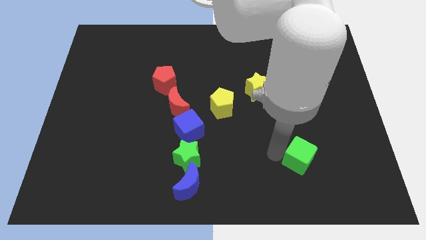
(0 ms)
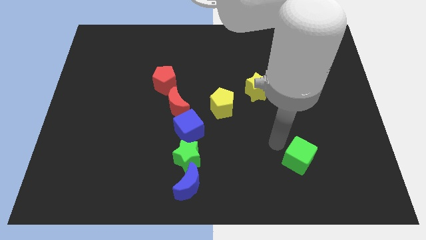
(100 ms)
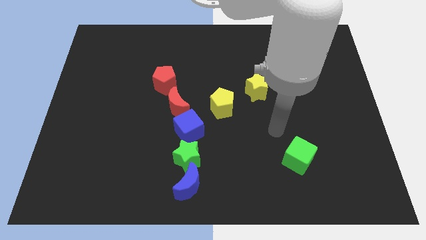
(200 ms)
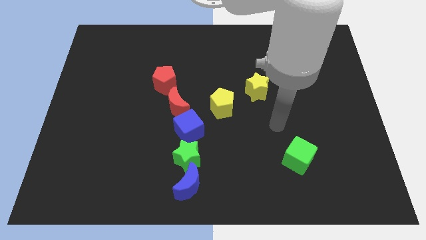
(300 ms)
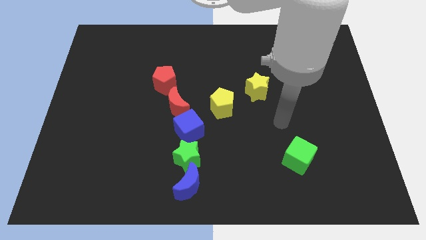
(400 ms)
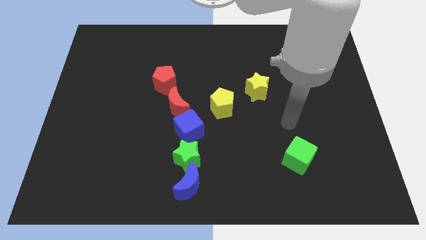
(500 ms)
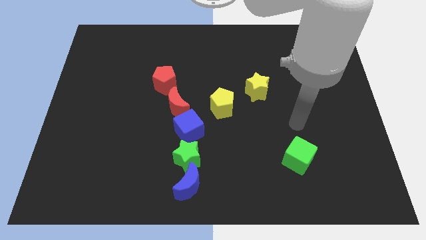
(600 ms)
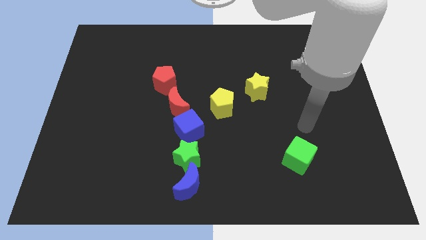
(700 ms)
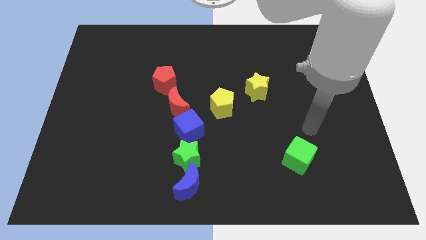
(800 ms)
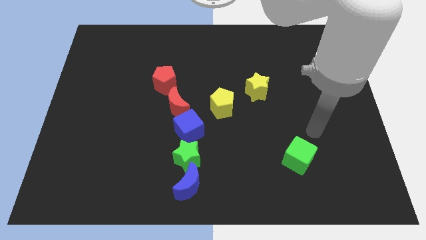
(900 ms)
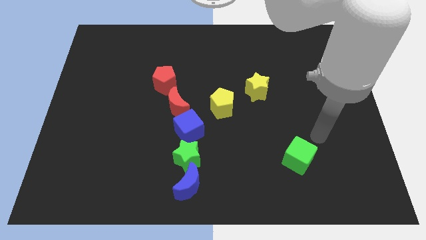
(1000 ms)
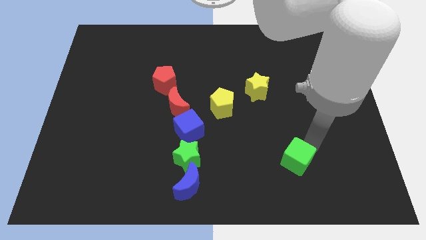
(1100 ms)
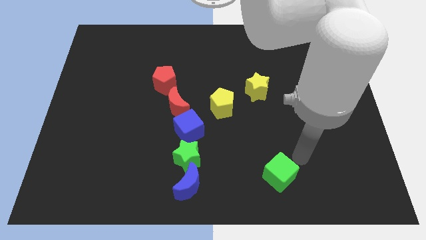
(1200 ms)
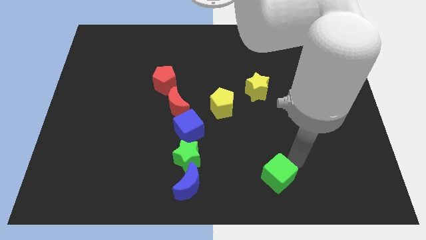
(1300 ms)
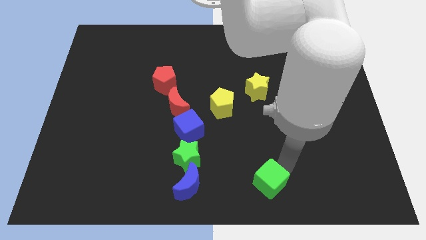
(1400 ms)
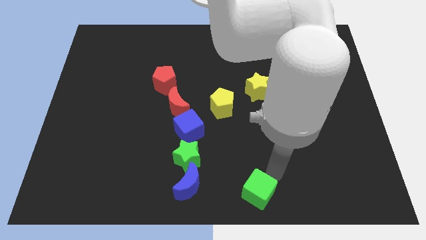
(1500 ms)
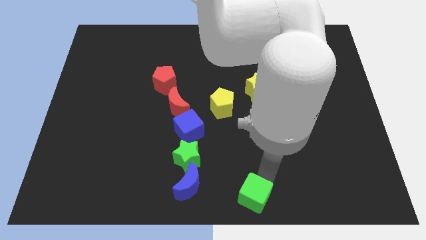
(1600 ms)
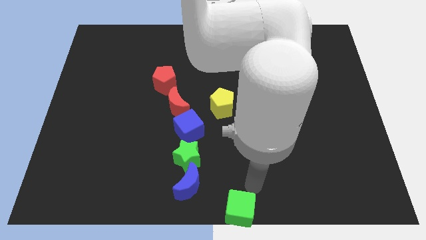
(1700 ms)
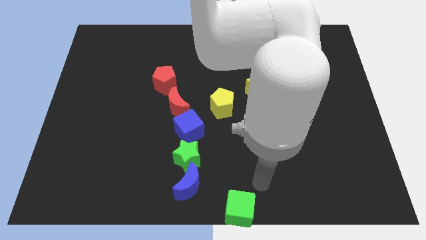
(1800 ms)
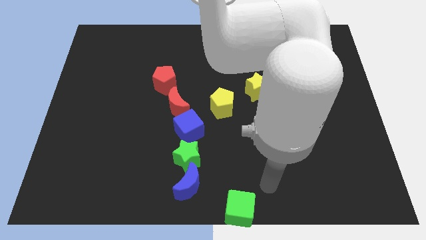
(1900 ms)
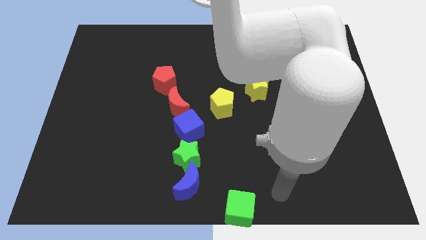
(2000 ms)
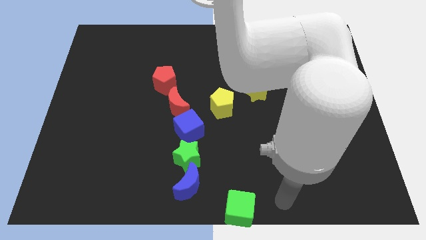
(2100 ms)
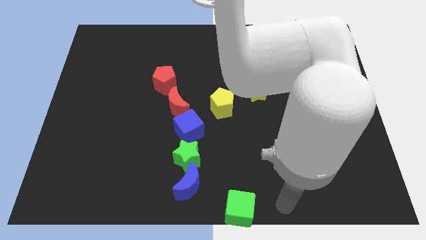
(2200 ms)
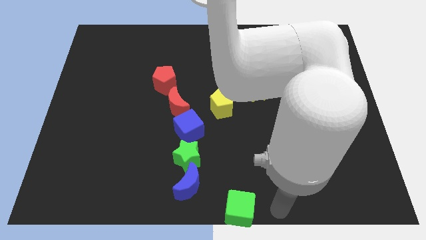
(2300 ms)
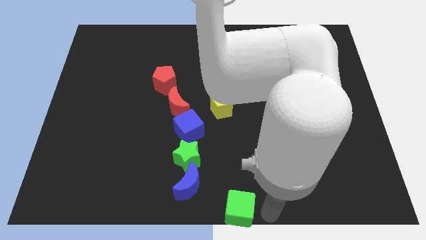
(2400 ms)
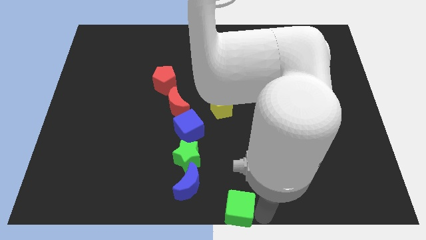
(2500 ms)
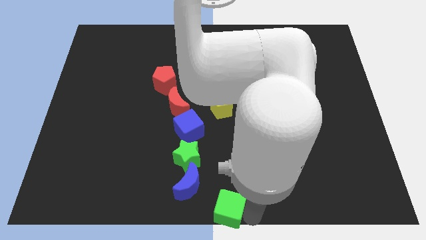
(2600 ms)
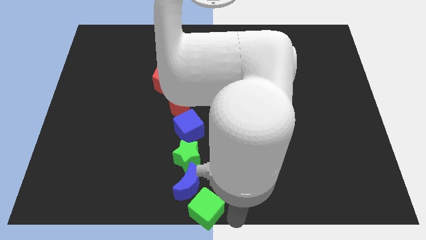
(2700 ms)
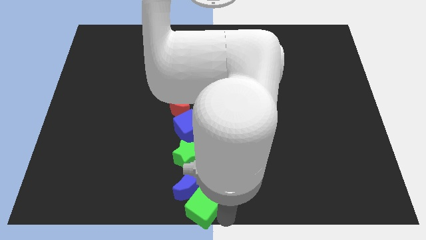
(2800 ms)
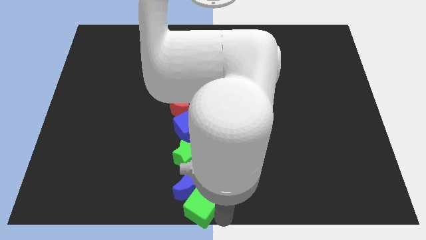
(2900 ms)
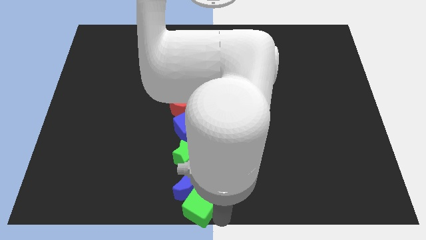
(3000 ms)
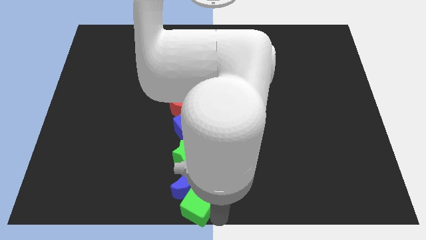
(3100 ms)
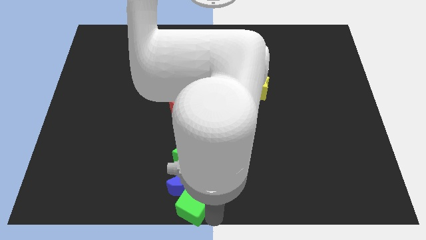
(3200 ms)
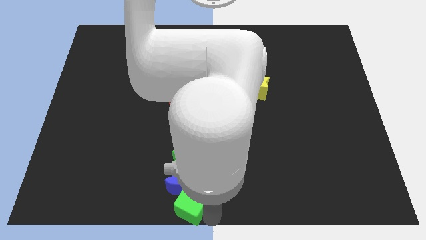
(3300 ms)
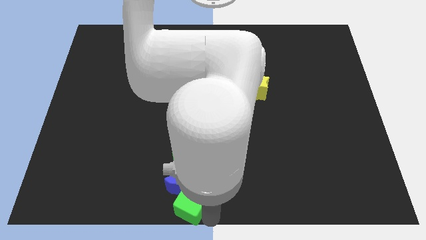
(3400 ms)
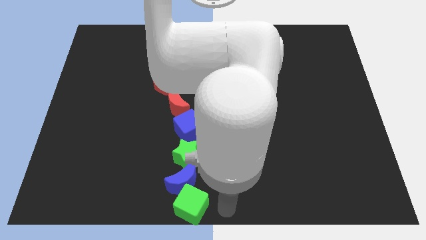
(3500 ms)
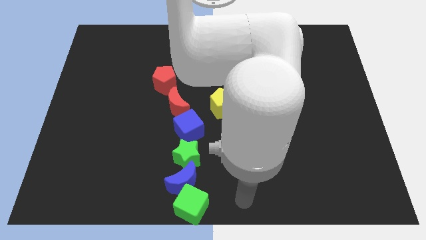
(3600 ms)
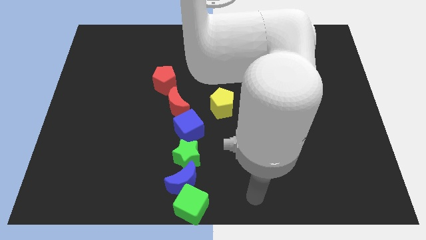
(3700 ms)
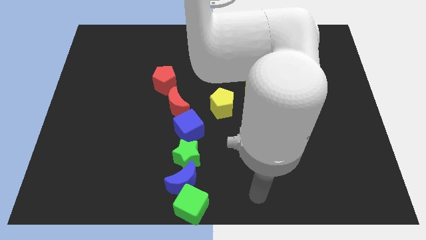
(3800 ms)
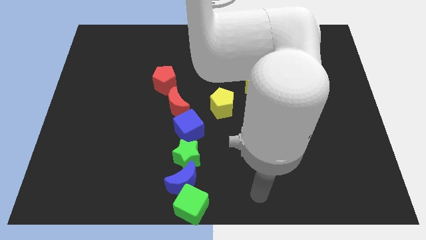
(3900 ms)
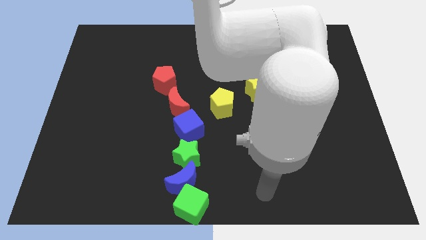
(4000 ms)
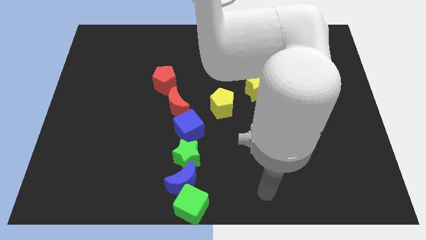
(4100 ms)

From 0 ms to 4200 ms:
move the green cube to the bottom of the blue moon

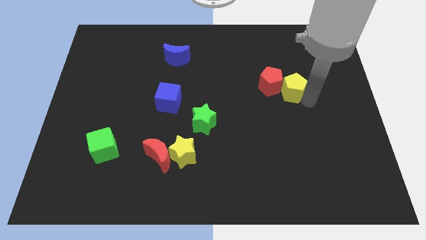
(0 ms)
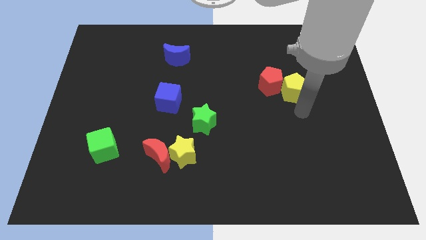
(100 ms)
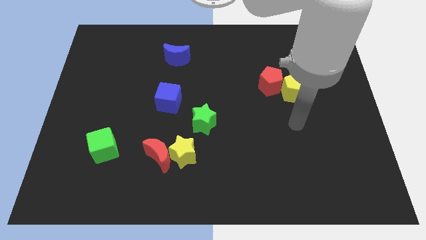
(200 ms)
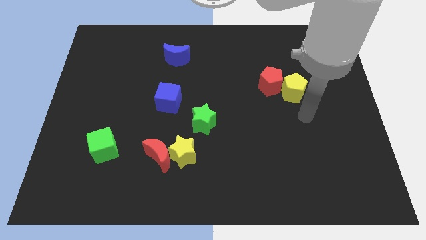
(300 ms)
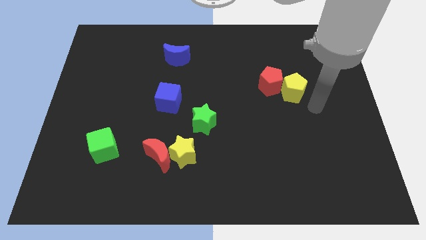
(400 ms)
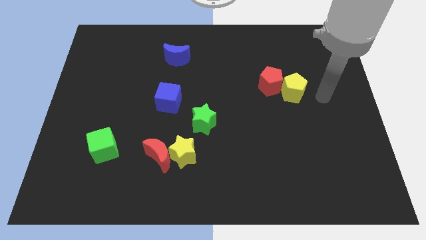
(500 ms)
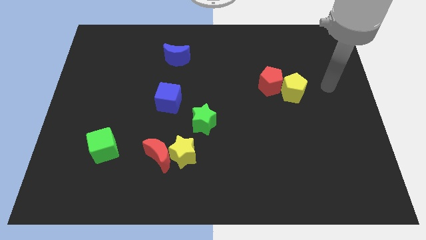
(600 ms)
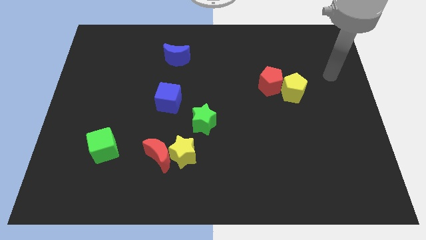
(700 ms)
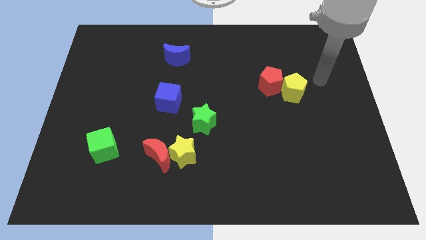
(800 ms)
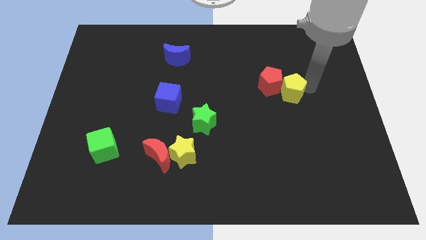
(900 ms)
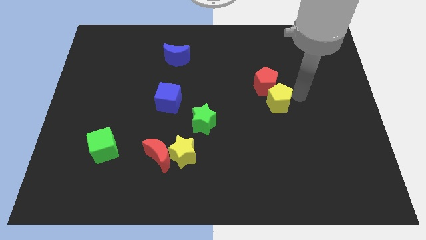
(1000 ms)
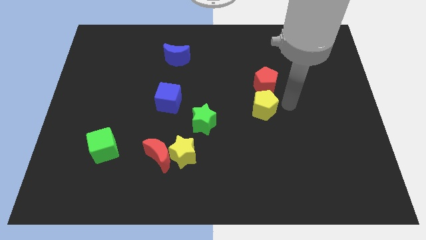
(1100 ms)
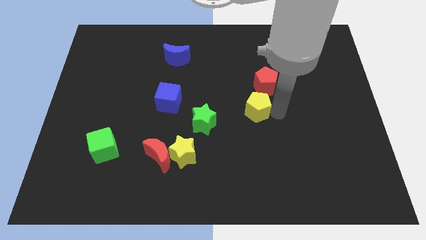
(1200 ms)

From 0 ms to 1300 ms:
move the yellow pentagon to the bottom side of the red pentagon

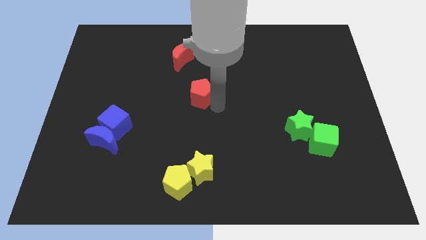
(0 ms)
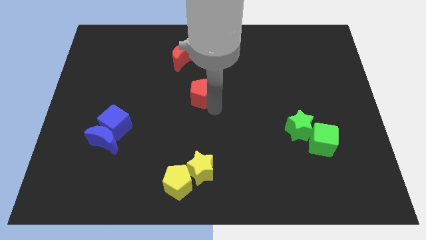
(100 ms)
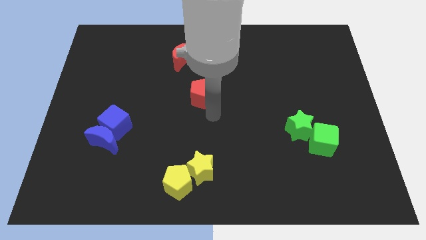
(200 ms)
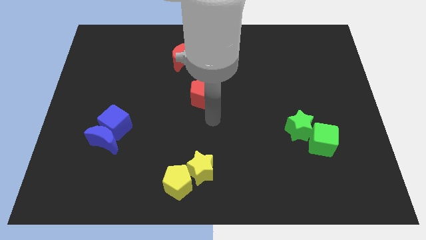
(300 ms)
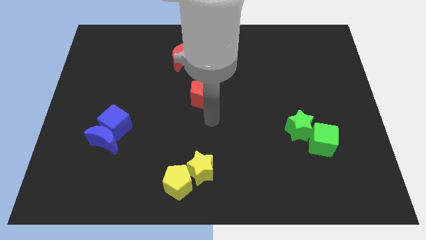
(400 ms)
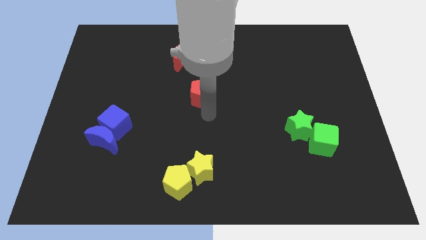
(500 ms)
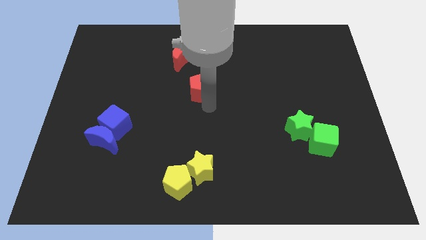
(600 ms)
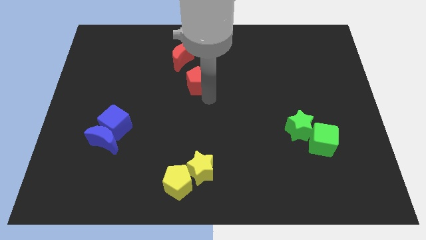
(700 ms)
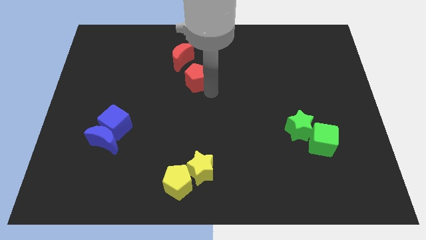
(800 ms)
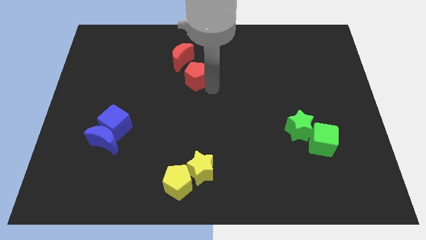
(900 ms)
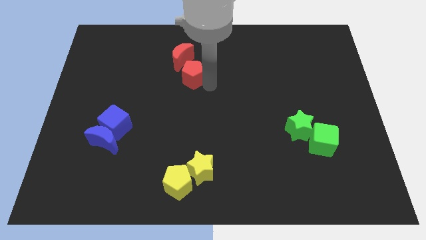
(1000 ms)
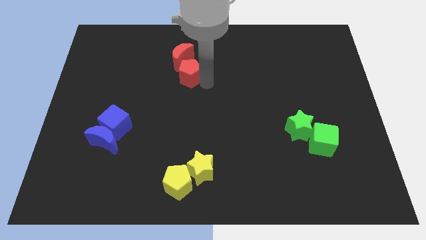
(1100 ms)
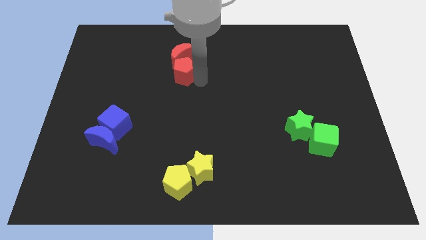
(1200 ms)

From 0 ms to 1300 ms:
push the red pentagon into the red moon

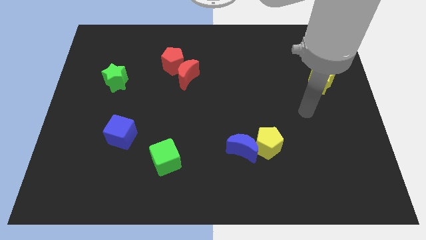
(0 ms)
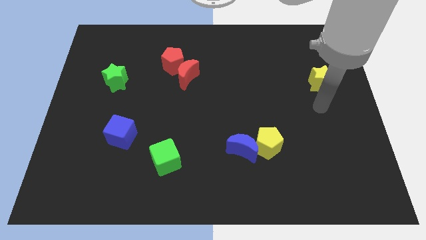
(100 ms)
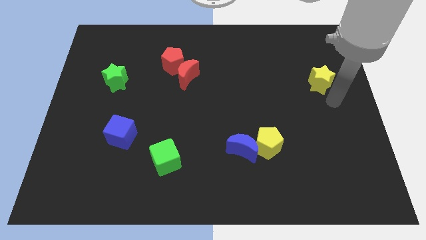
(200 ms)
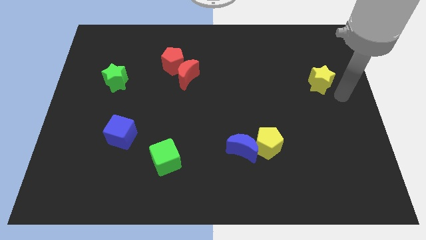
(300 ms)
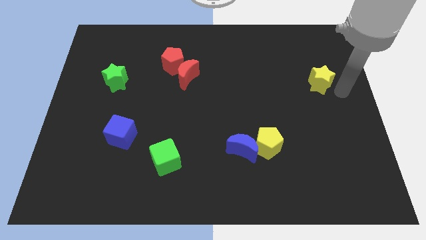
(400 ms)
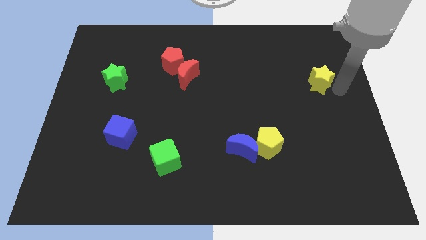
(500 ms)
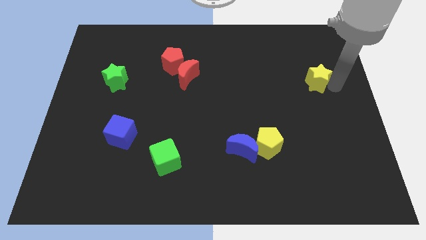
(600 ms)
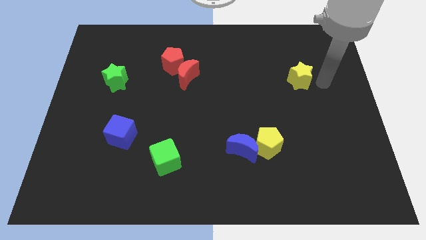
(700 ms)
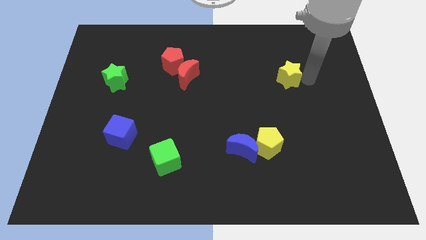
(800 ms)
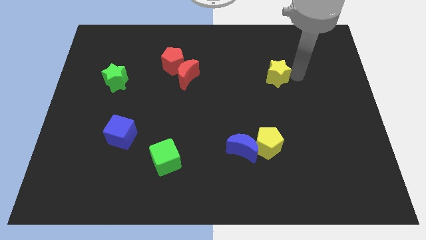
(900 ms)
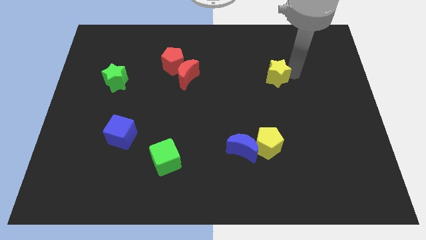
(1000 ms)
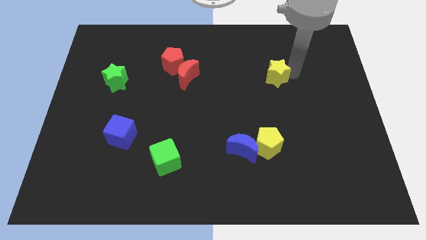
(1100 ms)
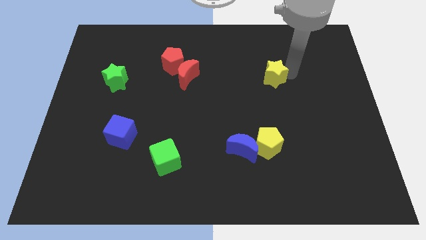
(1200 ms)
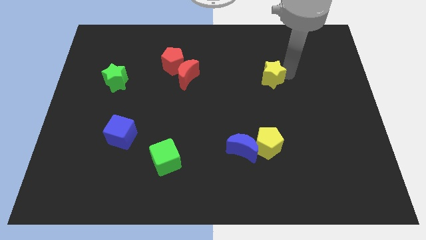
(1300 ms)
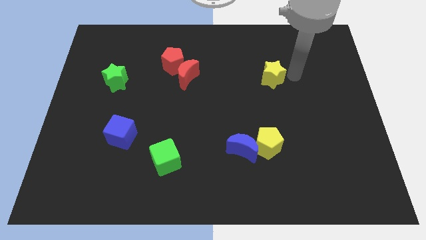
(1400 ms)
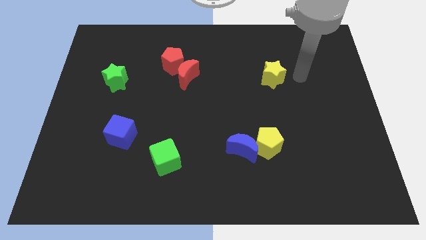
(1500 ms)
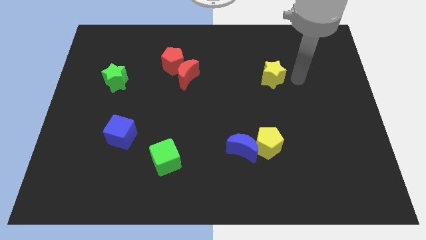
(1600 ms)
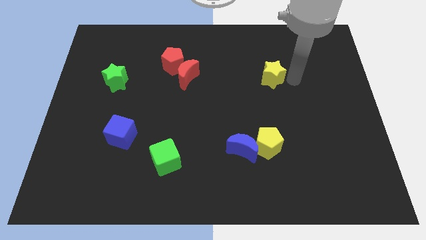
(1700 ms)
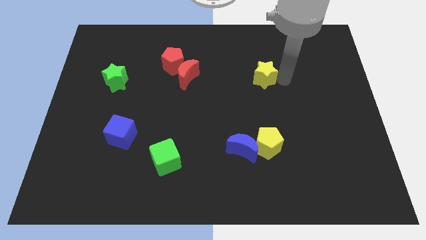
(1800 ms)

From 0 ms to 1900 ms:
push the yellow star to the top side of the yellow pentagon

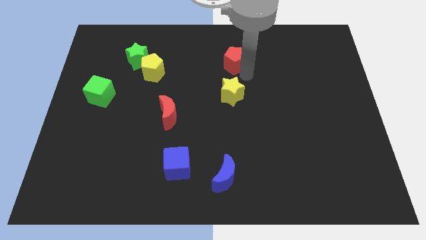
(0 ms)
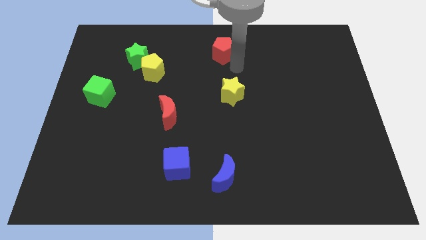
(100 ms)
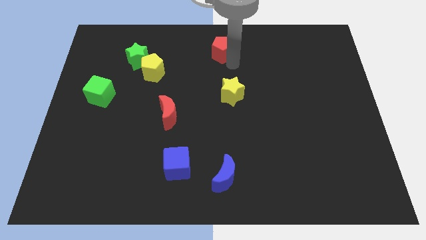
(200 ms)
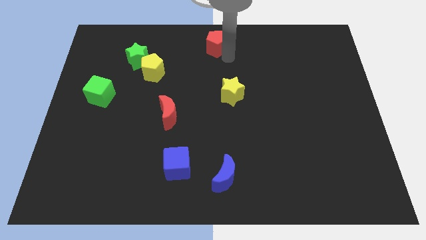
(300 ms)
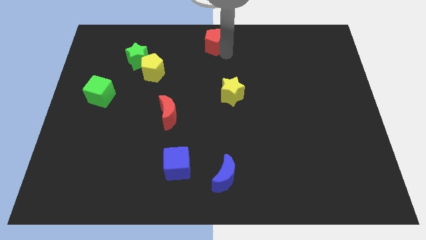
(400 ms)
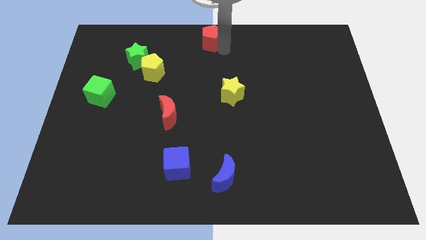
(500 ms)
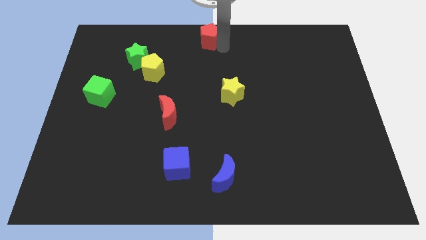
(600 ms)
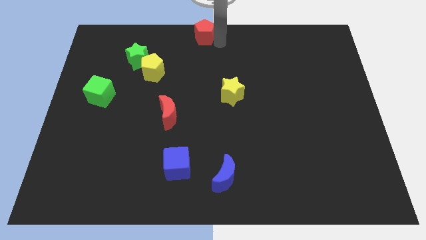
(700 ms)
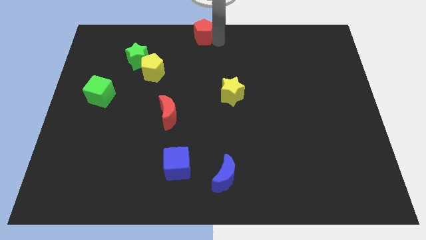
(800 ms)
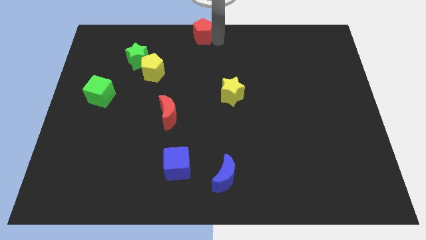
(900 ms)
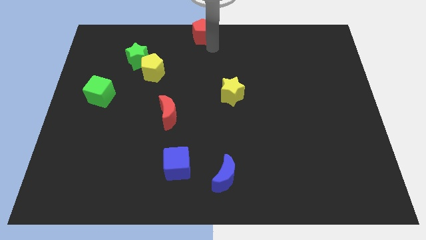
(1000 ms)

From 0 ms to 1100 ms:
place the red pentagon at the top center of the board
